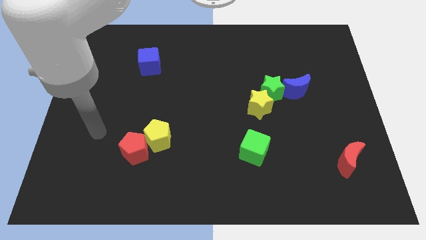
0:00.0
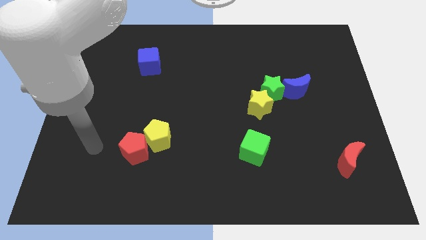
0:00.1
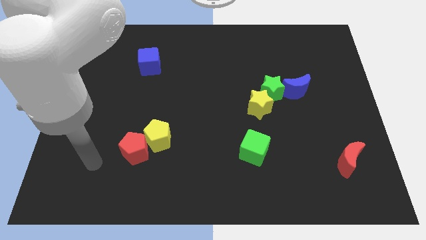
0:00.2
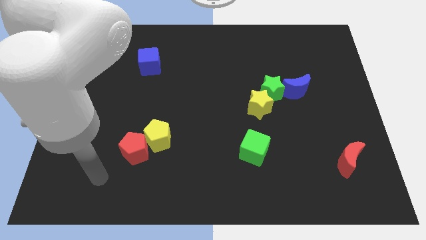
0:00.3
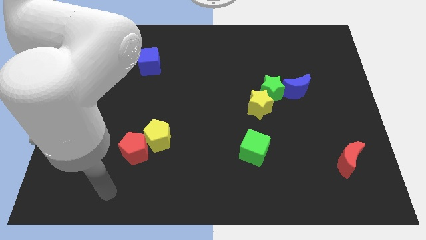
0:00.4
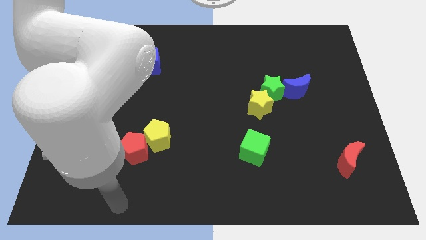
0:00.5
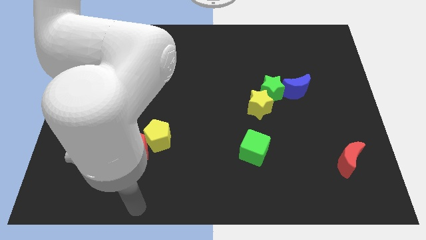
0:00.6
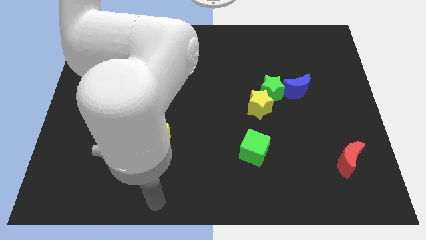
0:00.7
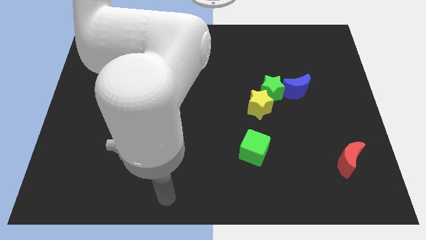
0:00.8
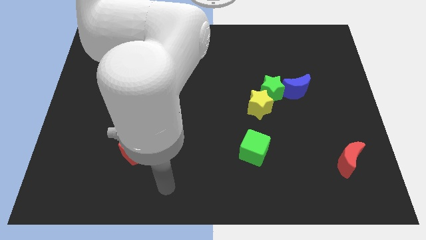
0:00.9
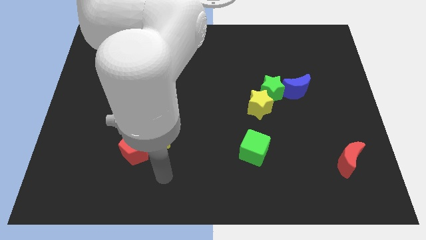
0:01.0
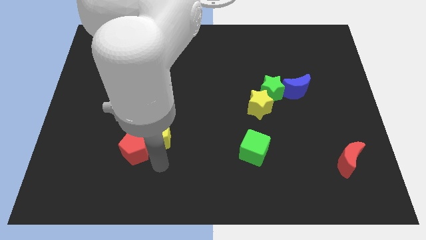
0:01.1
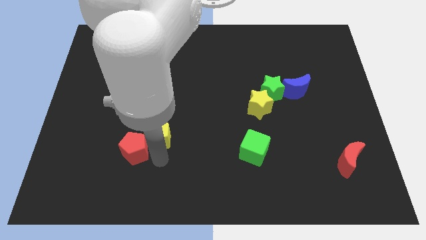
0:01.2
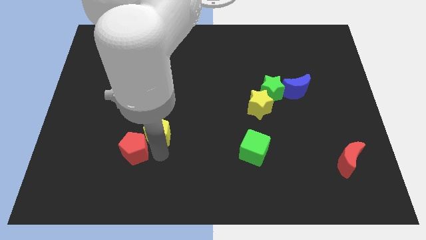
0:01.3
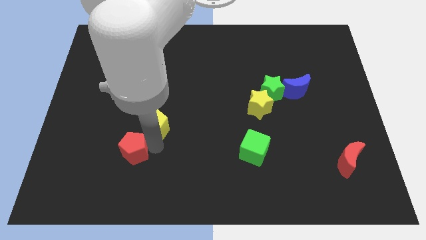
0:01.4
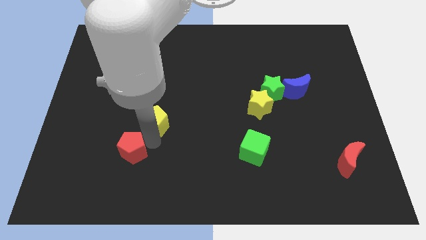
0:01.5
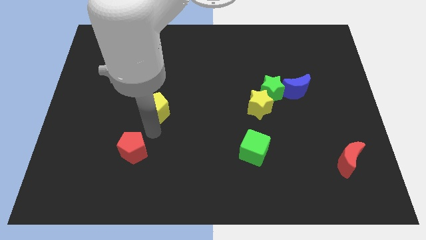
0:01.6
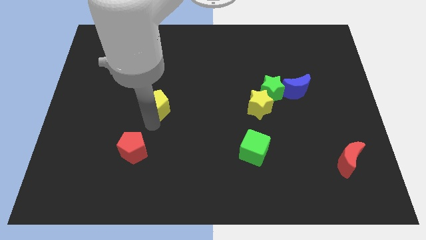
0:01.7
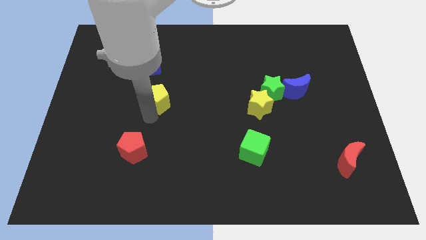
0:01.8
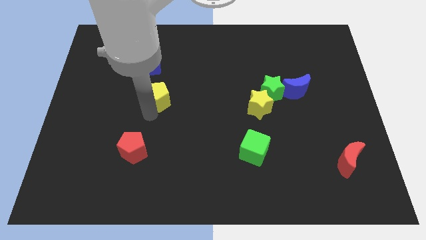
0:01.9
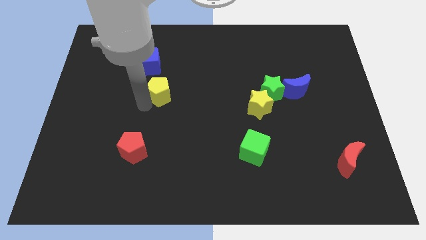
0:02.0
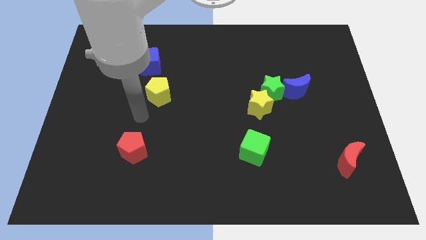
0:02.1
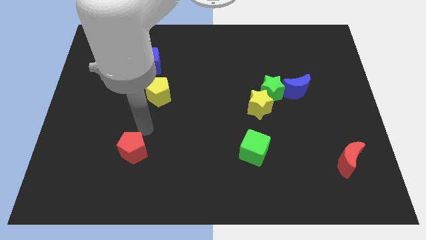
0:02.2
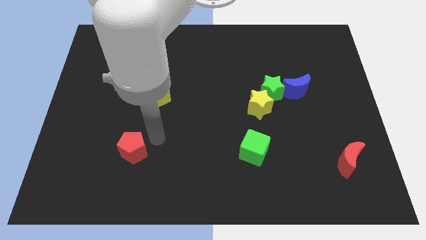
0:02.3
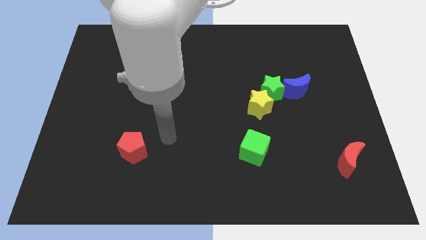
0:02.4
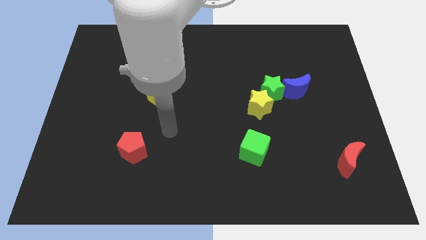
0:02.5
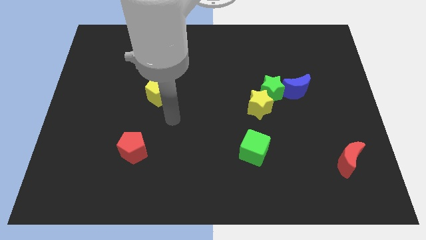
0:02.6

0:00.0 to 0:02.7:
move the yellow pentagon below the blue cube

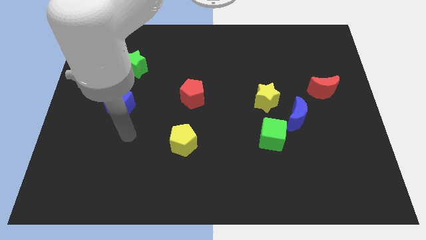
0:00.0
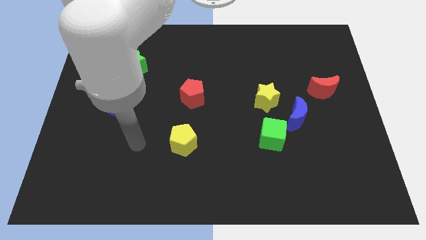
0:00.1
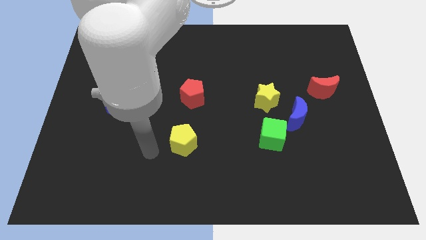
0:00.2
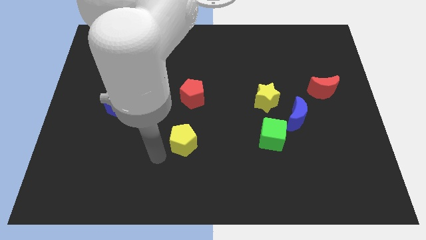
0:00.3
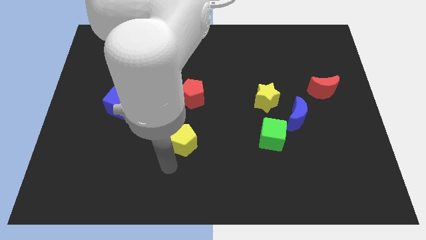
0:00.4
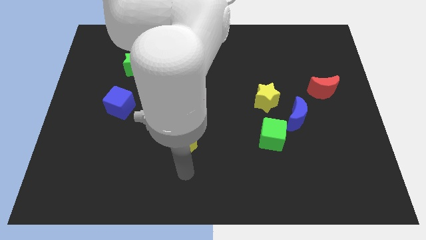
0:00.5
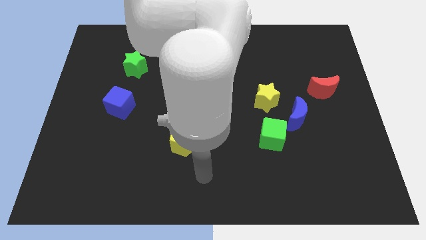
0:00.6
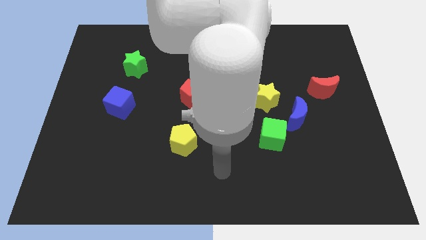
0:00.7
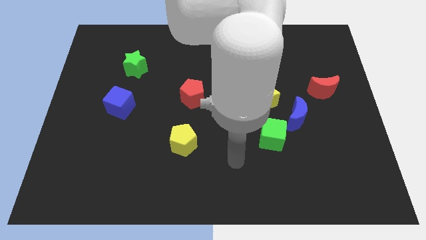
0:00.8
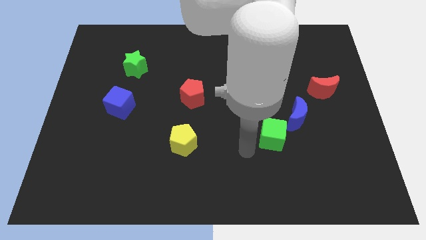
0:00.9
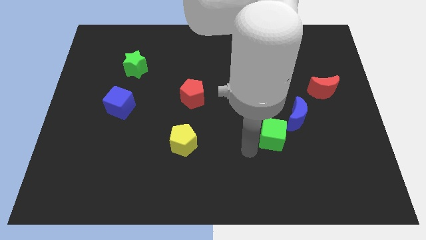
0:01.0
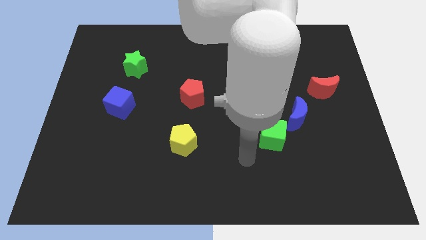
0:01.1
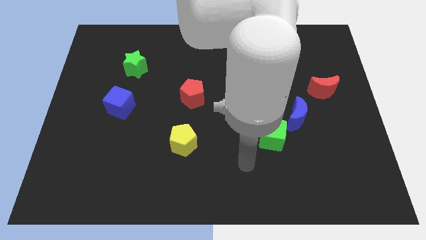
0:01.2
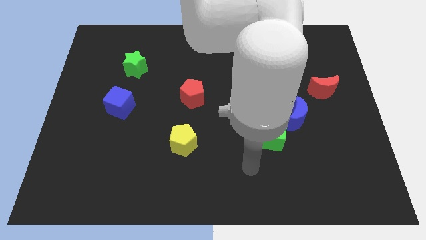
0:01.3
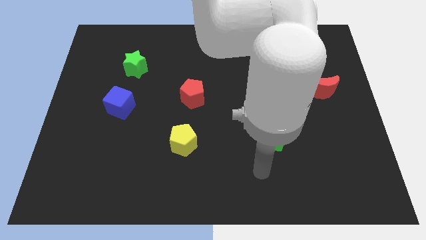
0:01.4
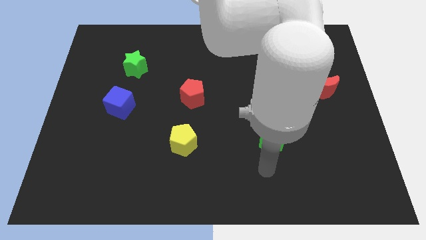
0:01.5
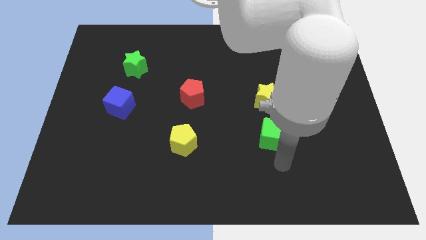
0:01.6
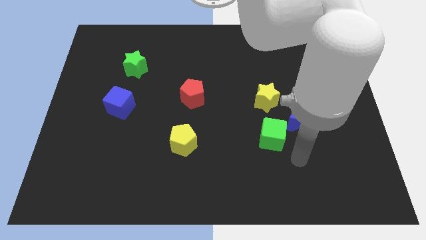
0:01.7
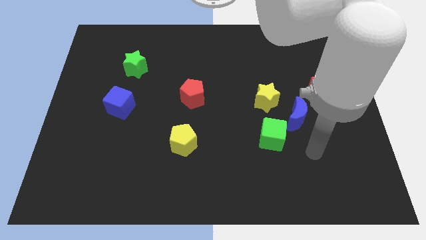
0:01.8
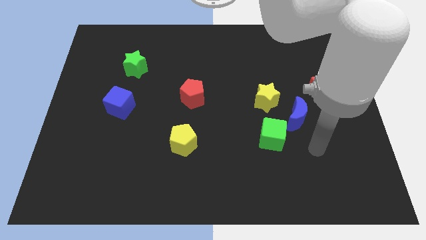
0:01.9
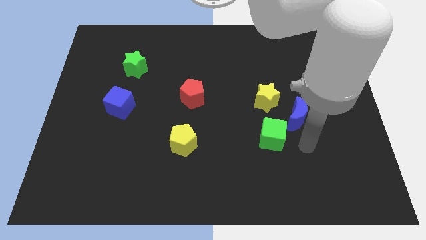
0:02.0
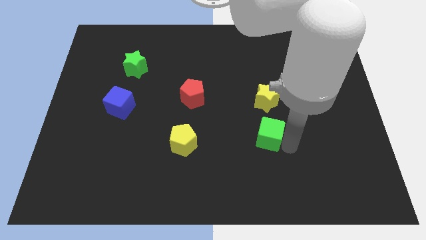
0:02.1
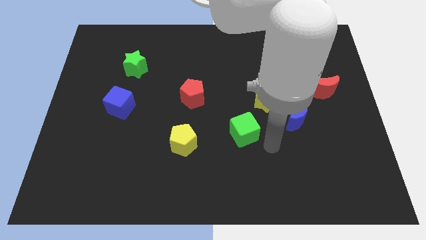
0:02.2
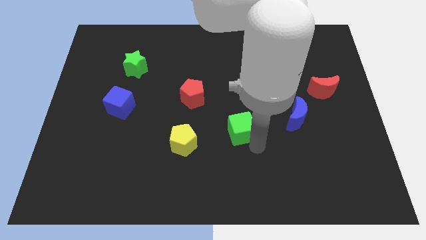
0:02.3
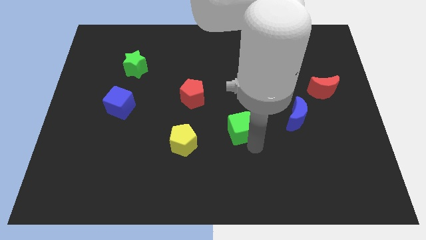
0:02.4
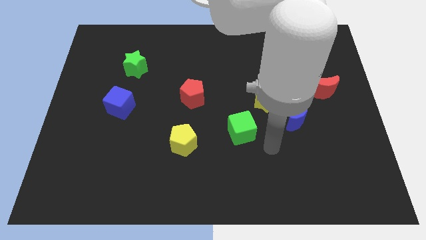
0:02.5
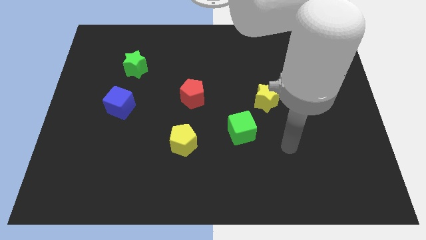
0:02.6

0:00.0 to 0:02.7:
push the green cube towards the center of the board

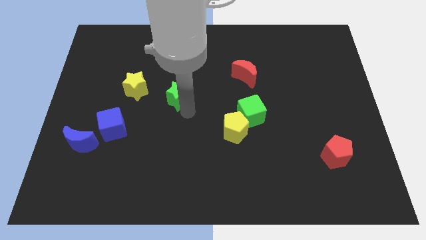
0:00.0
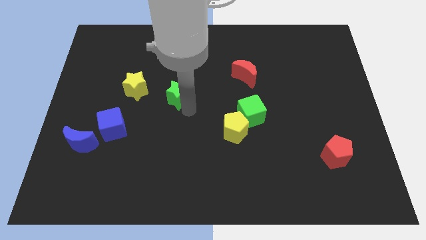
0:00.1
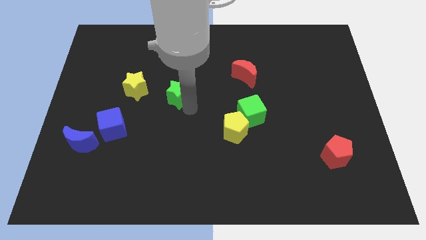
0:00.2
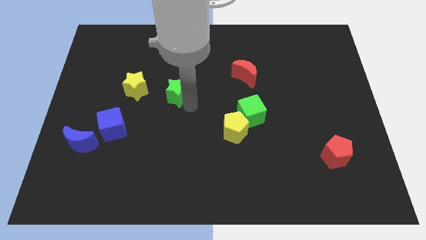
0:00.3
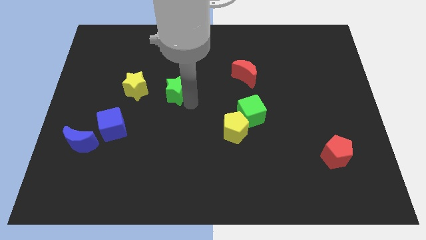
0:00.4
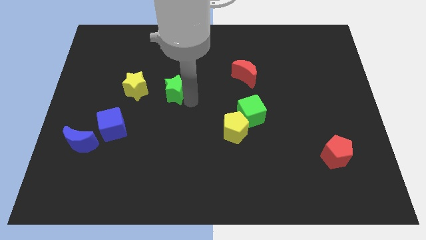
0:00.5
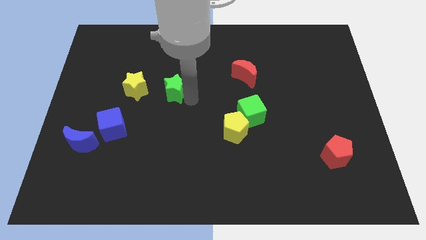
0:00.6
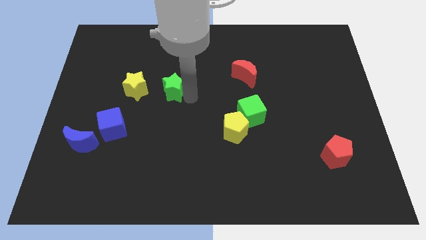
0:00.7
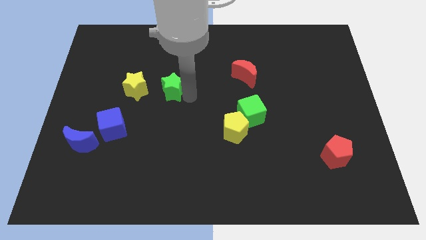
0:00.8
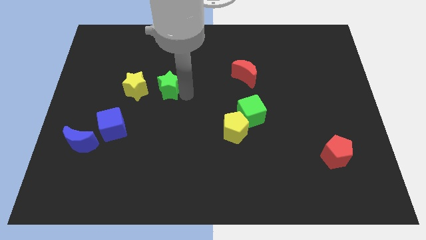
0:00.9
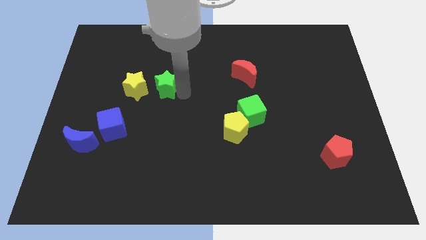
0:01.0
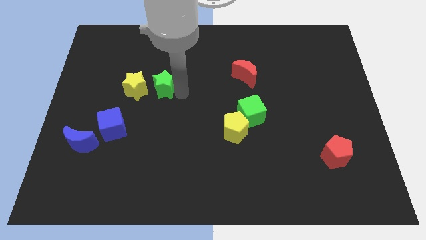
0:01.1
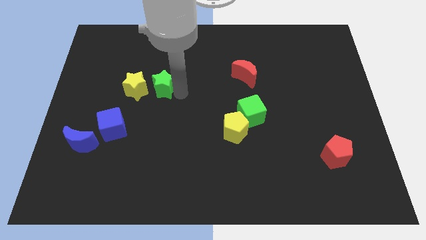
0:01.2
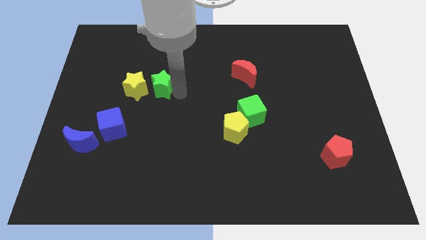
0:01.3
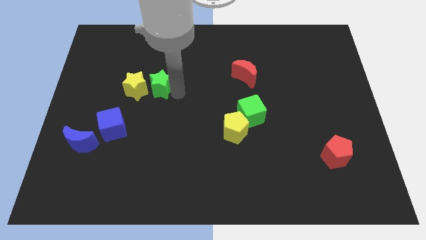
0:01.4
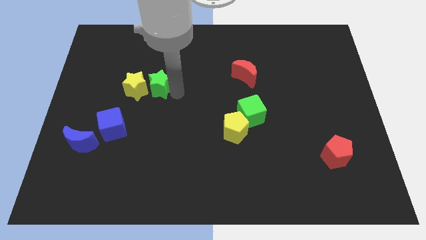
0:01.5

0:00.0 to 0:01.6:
move the green star towards the right side of the yellow star

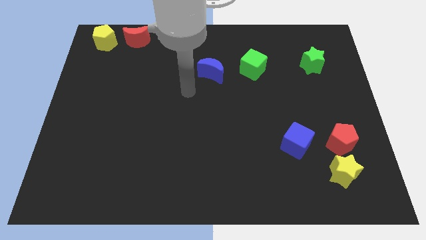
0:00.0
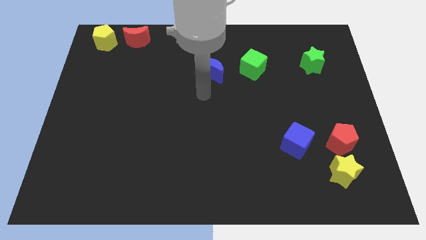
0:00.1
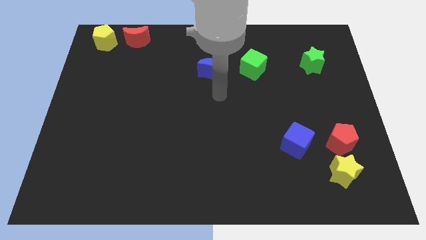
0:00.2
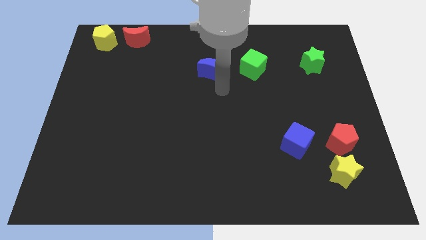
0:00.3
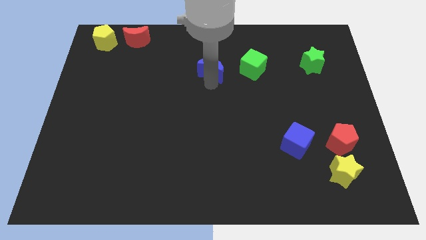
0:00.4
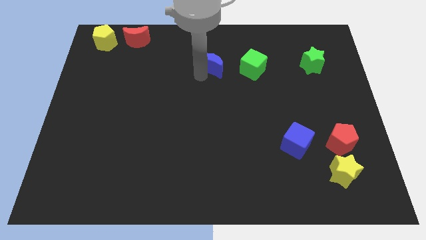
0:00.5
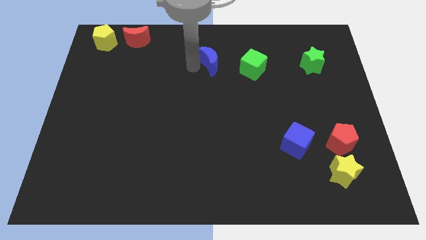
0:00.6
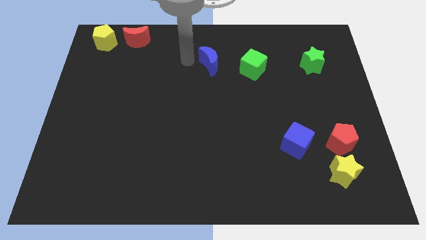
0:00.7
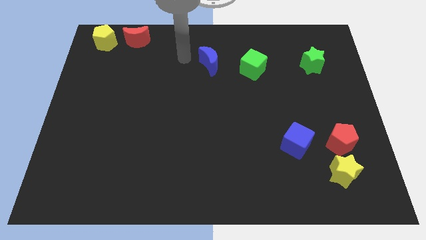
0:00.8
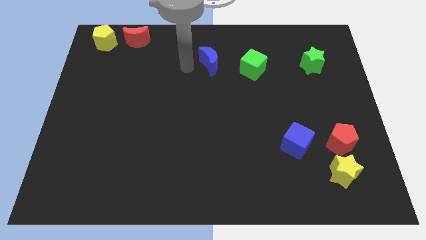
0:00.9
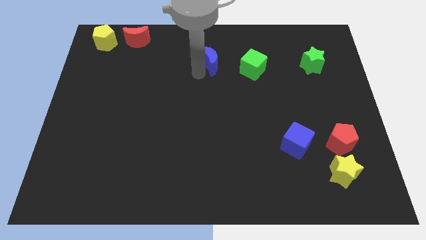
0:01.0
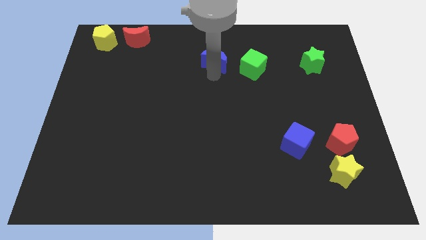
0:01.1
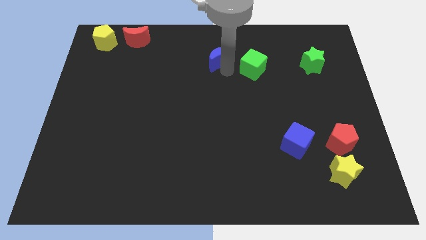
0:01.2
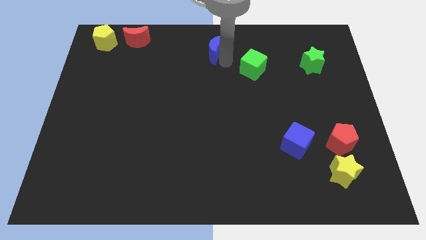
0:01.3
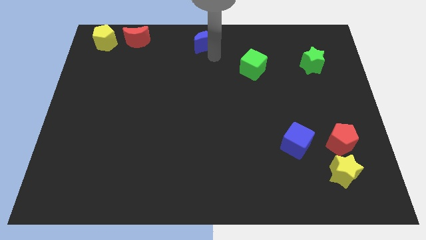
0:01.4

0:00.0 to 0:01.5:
move the blue moon to the top center

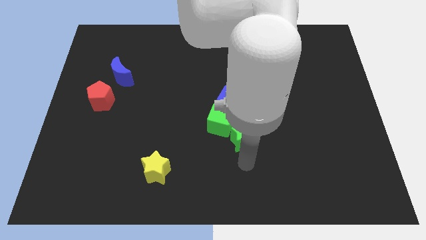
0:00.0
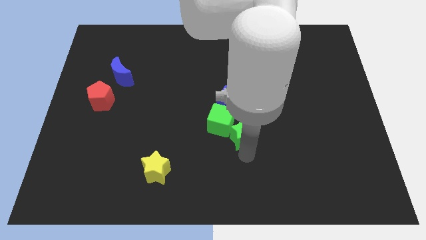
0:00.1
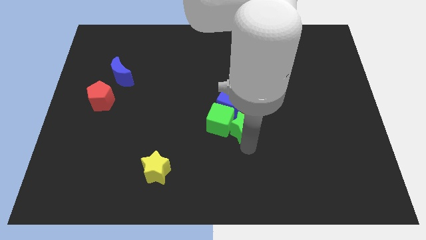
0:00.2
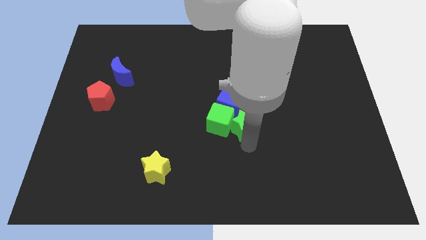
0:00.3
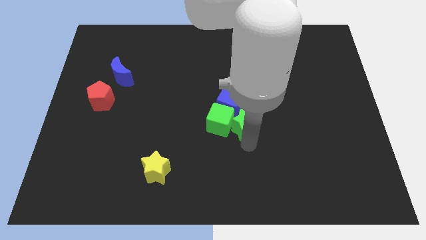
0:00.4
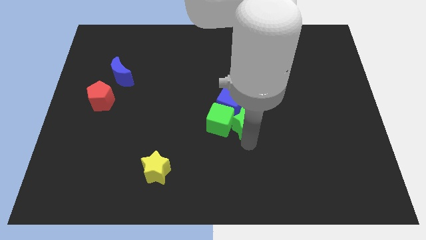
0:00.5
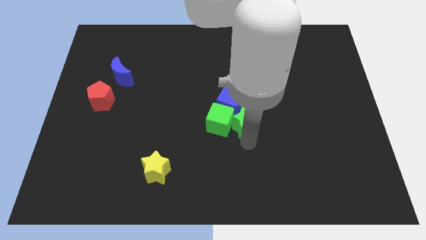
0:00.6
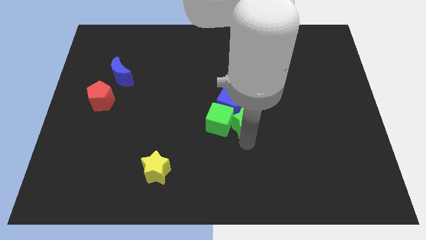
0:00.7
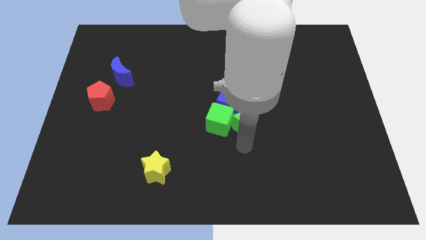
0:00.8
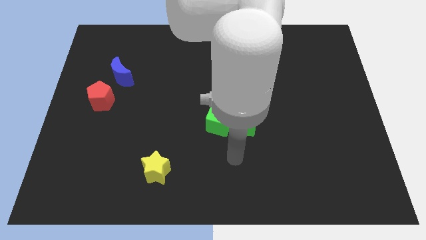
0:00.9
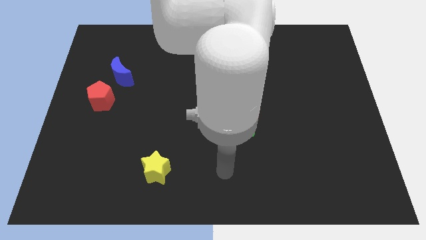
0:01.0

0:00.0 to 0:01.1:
move the green star slightly down to the red crescent
